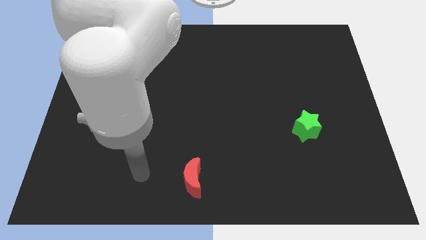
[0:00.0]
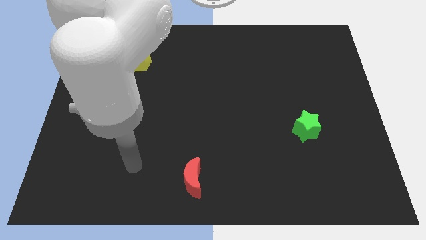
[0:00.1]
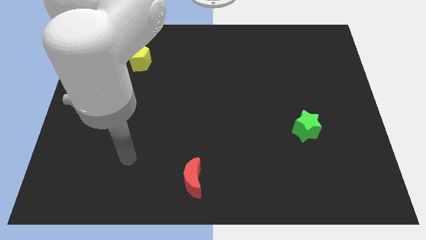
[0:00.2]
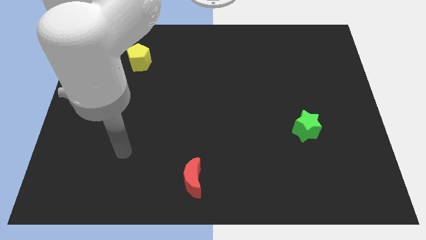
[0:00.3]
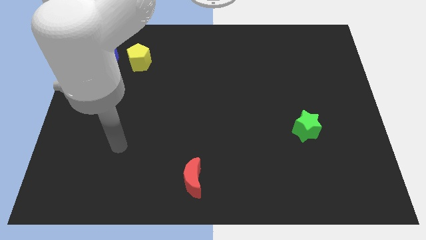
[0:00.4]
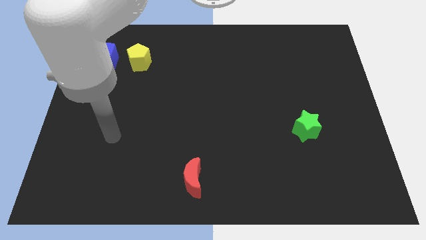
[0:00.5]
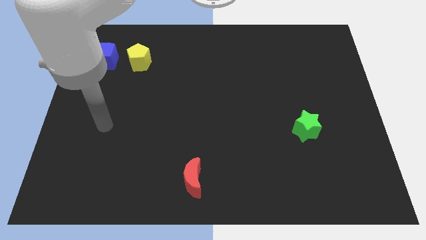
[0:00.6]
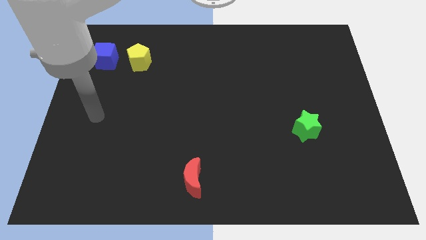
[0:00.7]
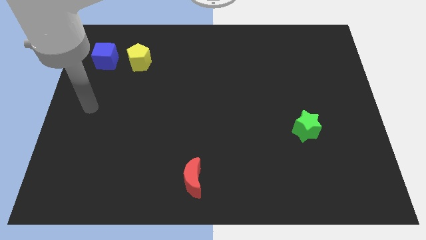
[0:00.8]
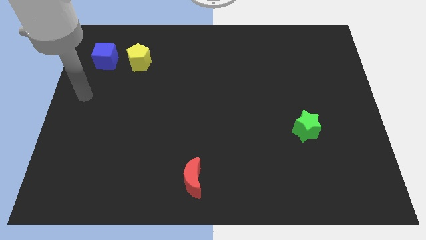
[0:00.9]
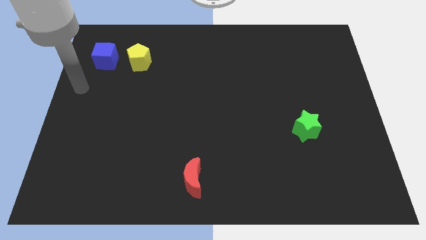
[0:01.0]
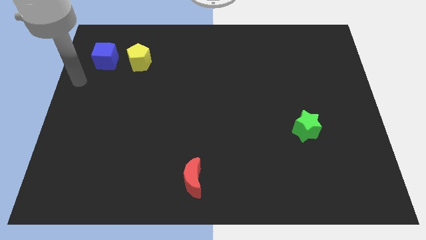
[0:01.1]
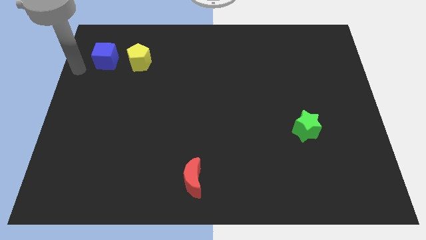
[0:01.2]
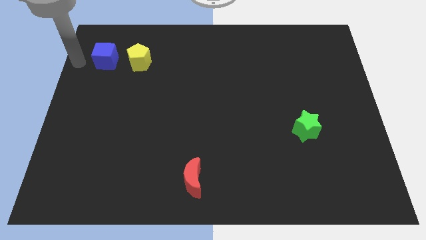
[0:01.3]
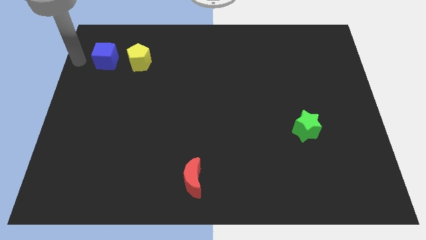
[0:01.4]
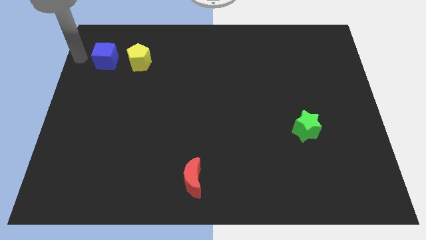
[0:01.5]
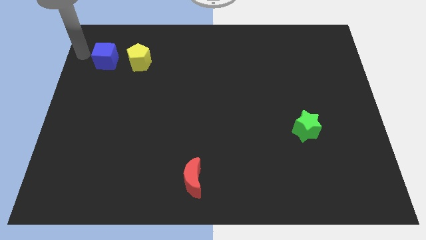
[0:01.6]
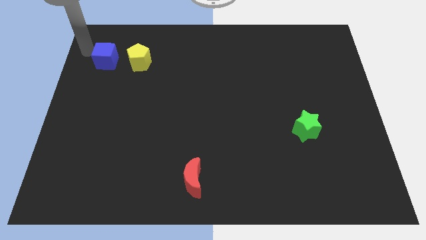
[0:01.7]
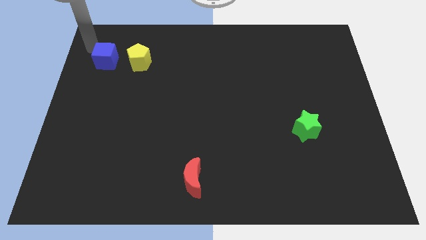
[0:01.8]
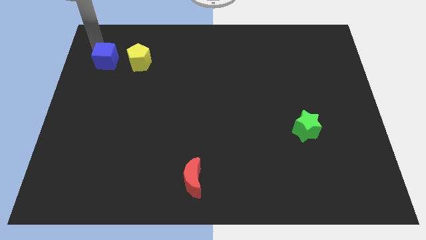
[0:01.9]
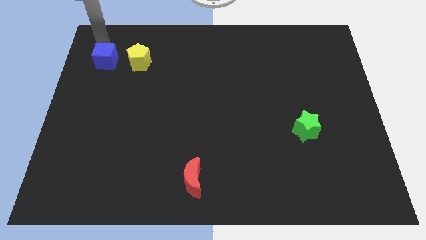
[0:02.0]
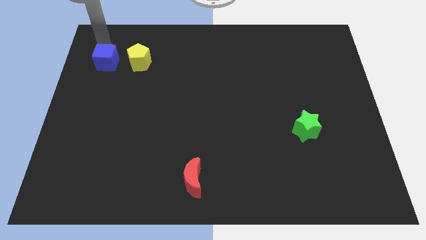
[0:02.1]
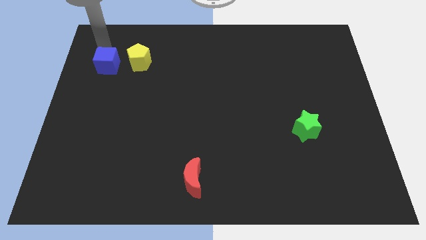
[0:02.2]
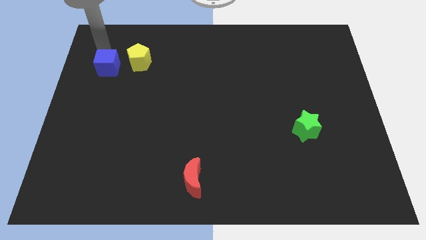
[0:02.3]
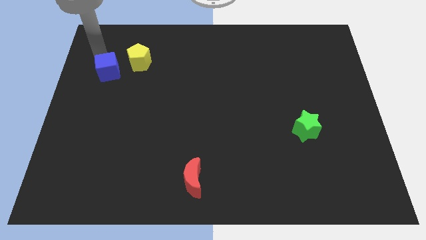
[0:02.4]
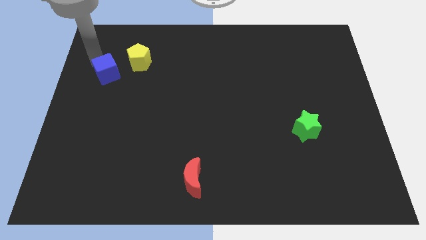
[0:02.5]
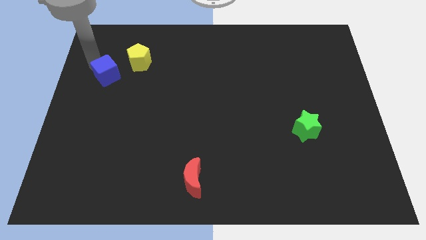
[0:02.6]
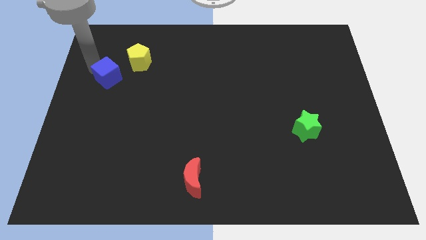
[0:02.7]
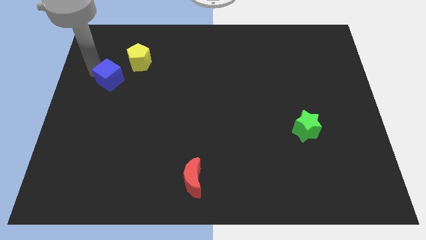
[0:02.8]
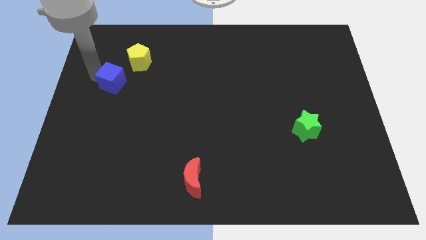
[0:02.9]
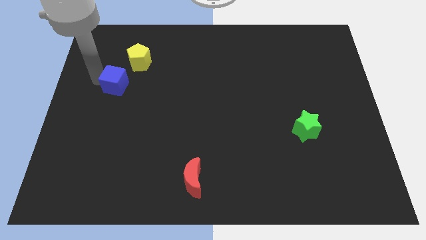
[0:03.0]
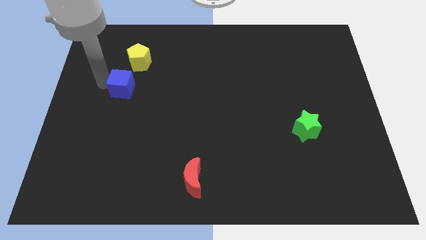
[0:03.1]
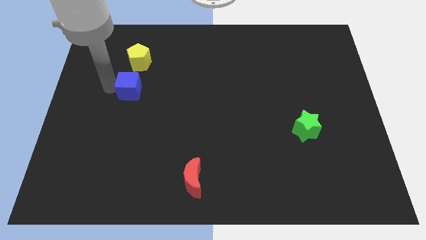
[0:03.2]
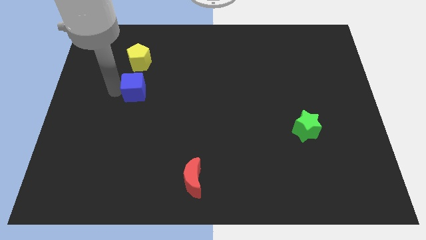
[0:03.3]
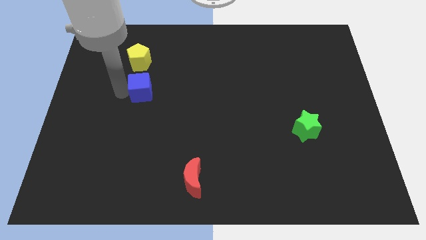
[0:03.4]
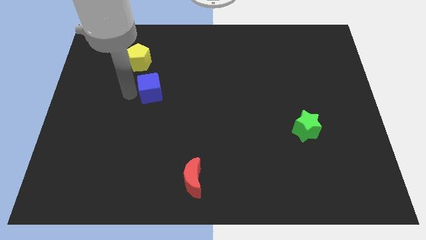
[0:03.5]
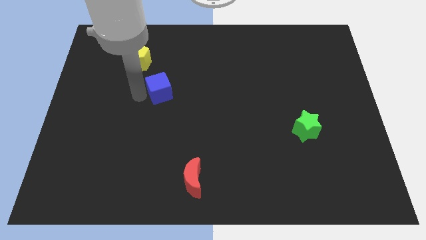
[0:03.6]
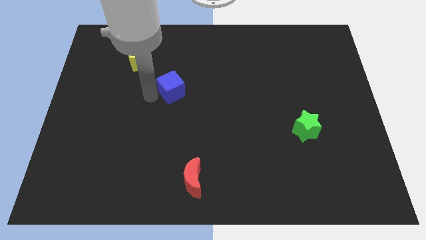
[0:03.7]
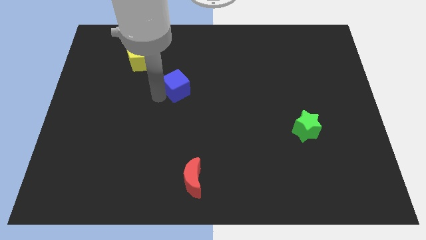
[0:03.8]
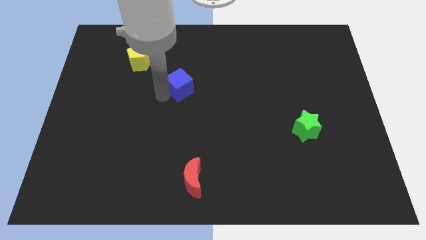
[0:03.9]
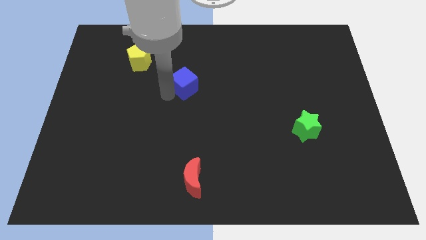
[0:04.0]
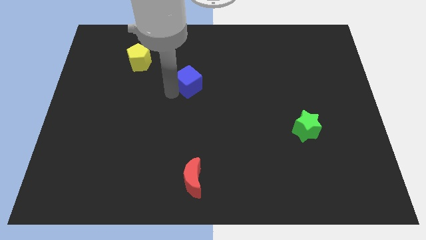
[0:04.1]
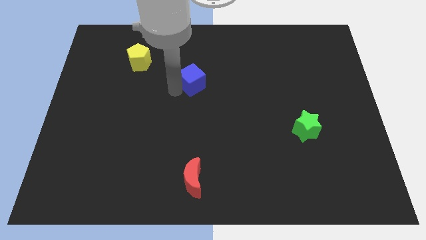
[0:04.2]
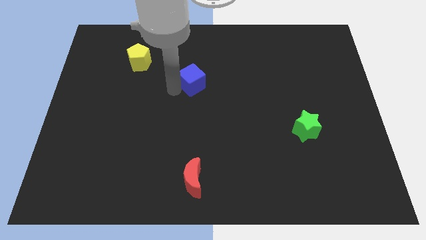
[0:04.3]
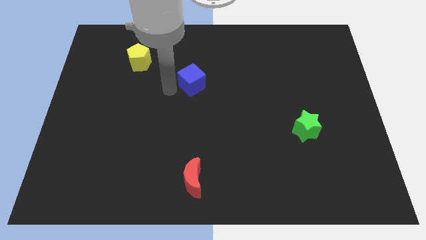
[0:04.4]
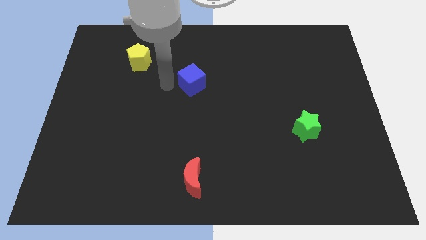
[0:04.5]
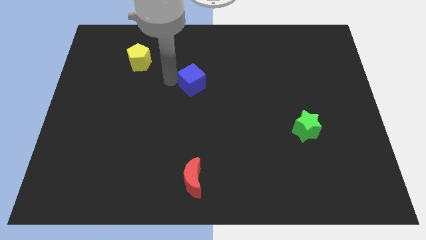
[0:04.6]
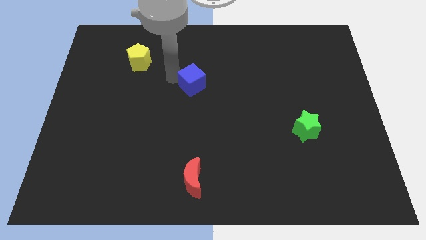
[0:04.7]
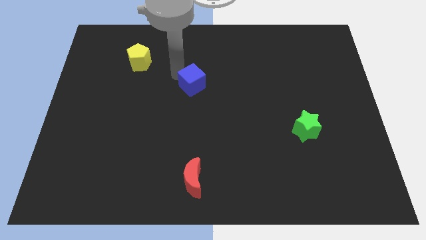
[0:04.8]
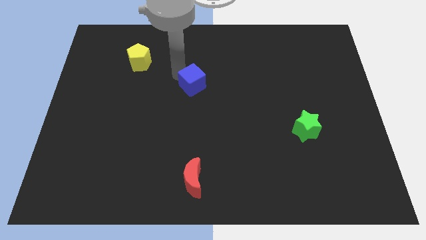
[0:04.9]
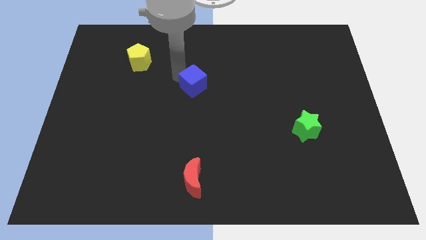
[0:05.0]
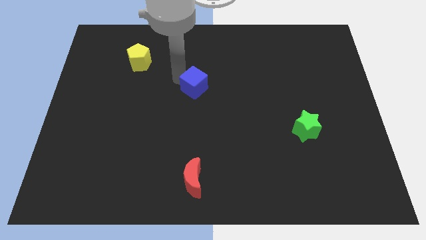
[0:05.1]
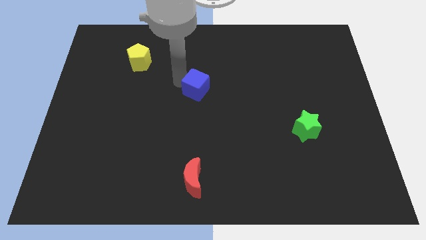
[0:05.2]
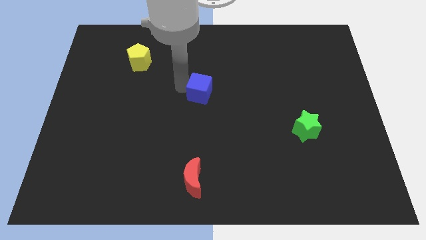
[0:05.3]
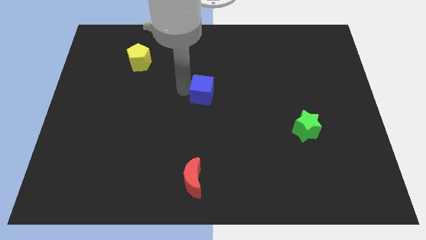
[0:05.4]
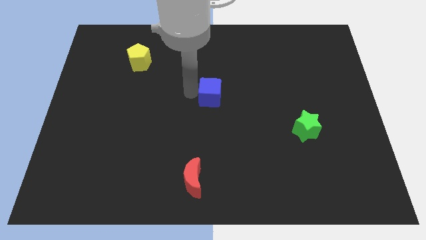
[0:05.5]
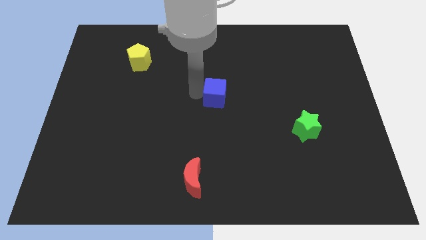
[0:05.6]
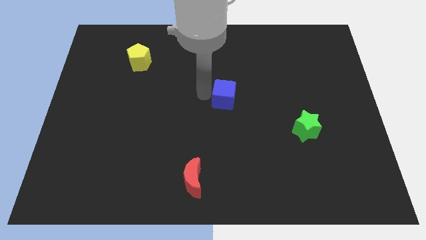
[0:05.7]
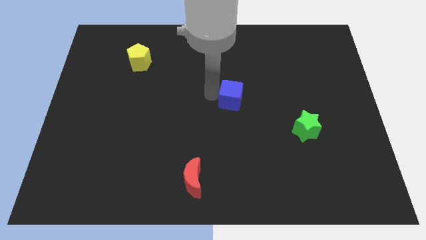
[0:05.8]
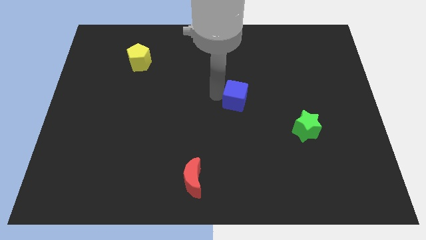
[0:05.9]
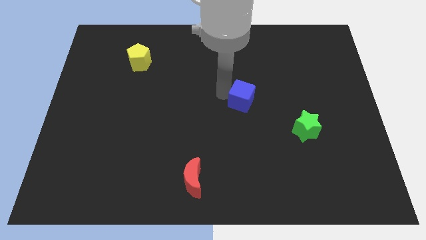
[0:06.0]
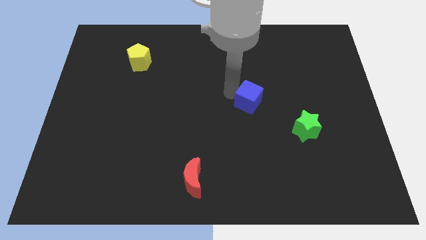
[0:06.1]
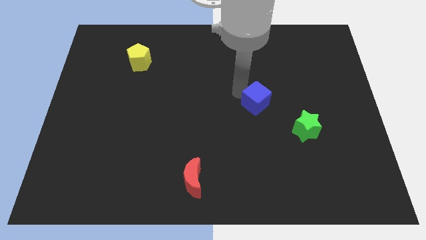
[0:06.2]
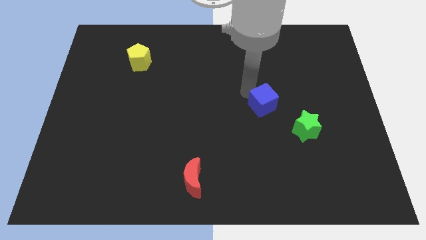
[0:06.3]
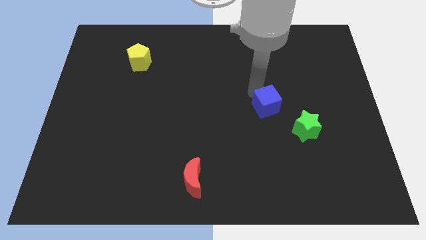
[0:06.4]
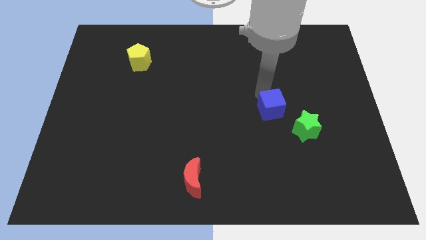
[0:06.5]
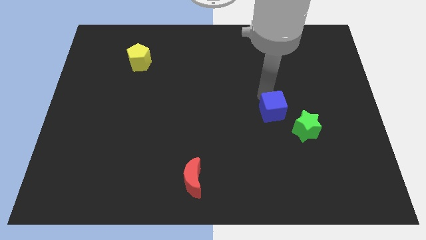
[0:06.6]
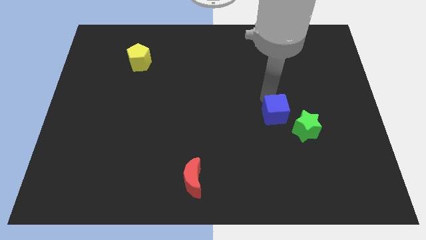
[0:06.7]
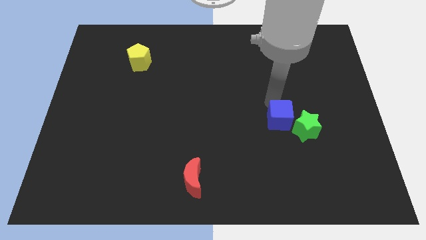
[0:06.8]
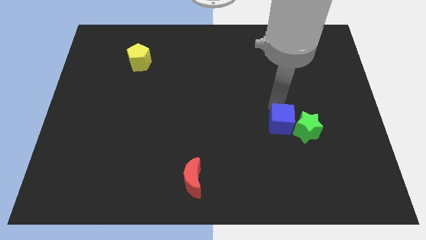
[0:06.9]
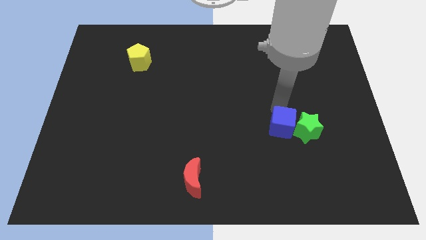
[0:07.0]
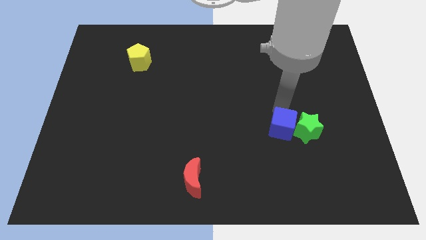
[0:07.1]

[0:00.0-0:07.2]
push the blue block next to the green star

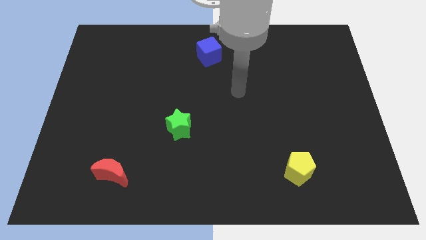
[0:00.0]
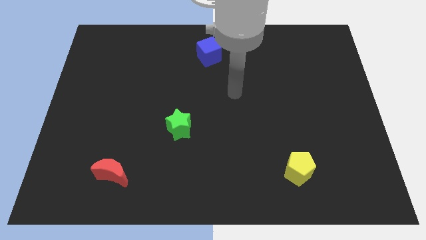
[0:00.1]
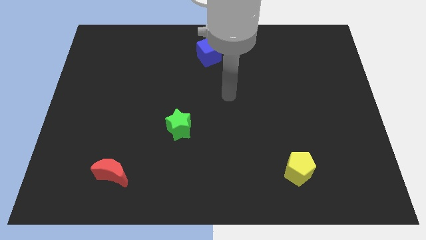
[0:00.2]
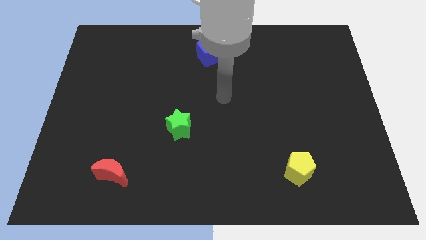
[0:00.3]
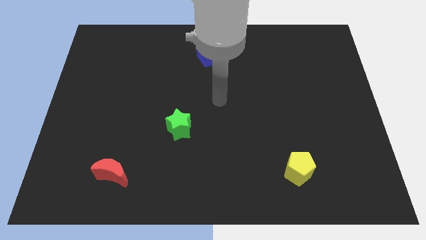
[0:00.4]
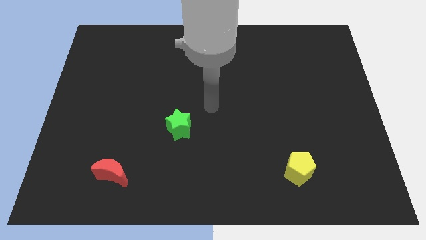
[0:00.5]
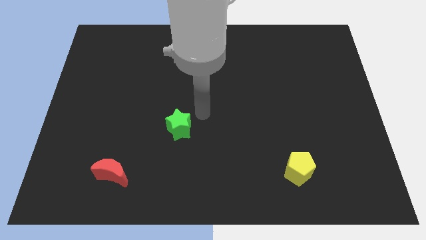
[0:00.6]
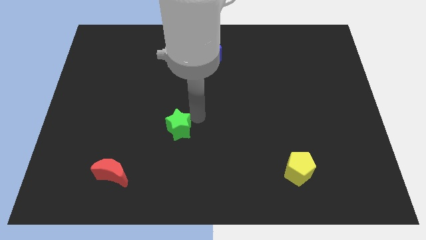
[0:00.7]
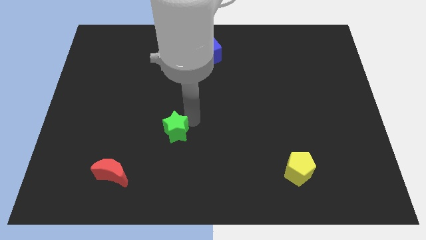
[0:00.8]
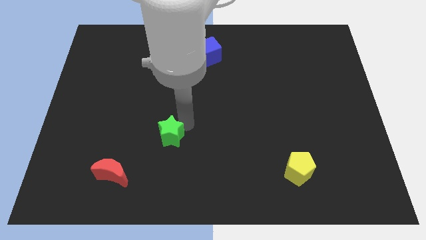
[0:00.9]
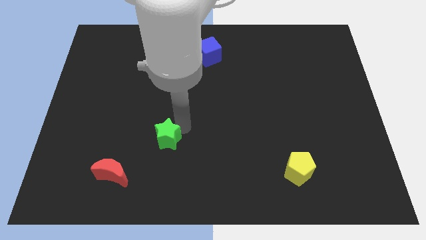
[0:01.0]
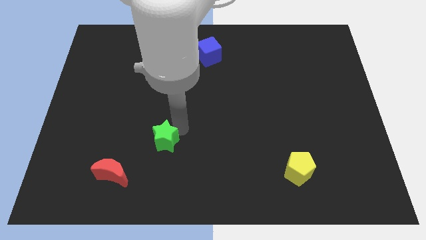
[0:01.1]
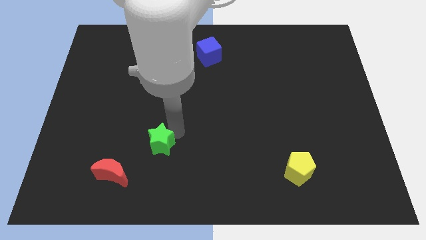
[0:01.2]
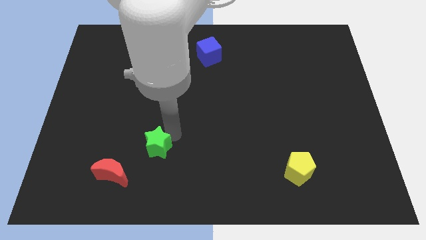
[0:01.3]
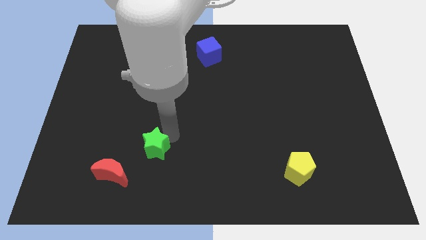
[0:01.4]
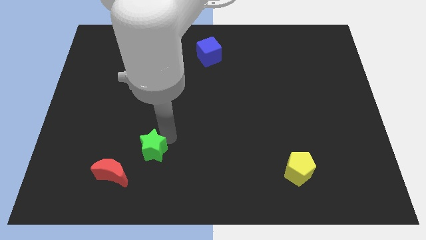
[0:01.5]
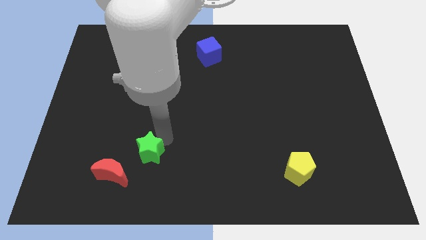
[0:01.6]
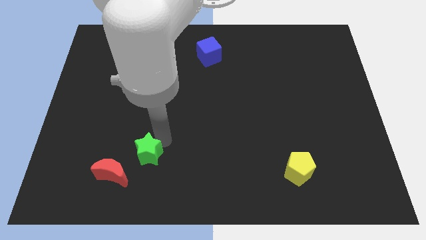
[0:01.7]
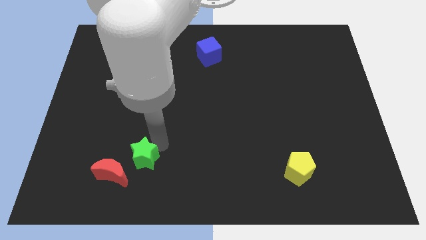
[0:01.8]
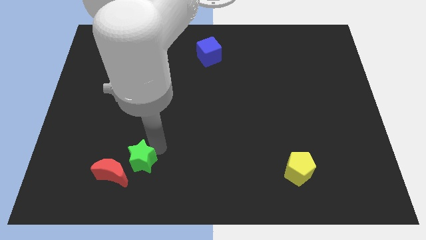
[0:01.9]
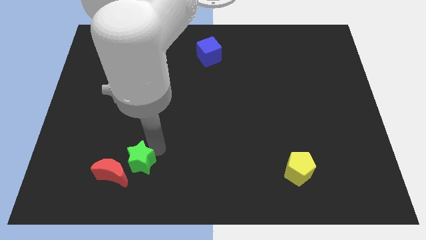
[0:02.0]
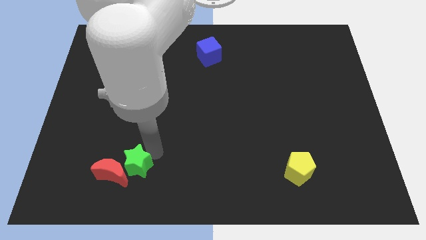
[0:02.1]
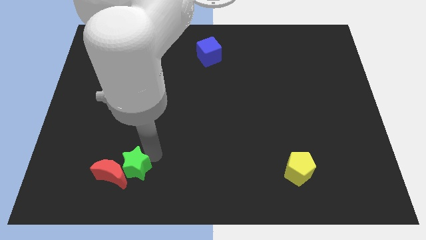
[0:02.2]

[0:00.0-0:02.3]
put the green block next to the red block
